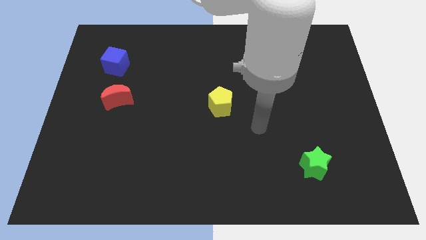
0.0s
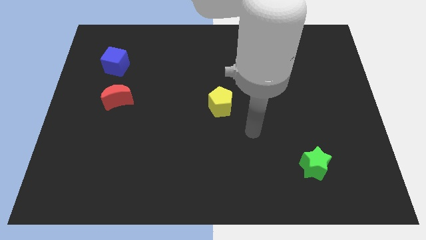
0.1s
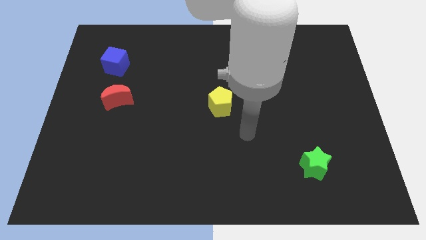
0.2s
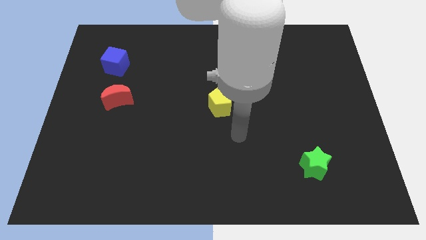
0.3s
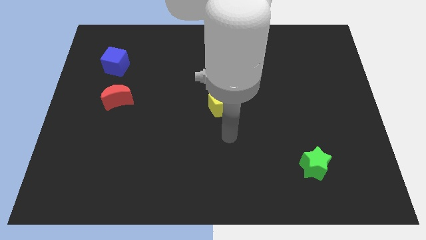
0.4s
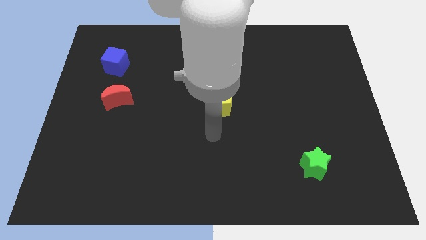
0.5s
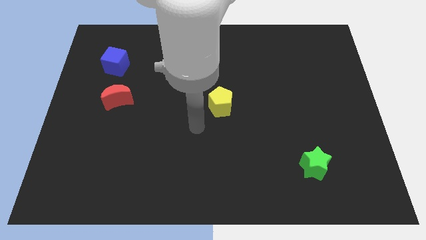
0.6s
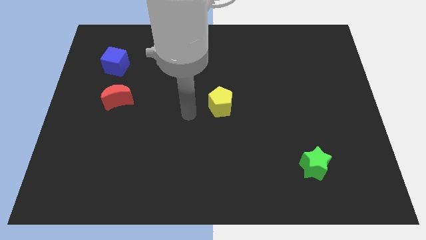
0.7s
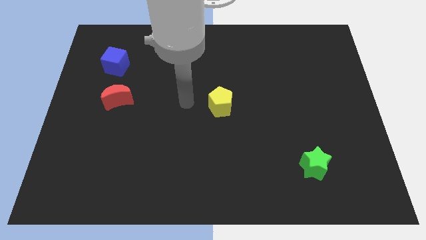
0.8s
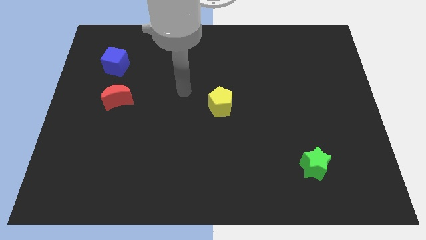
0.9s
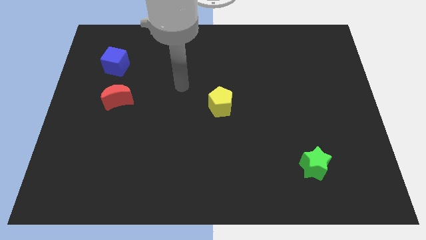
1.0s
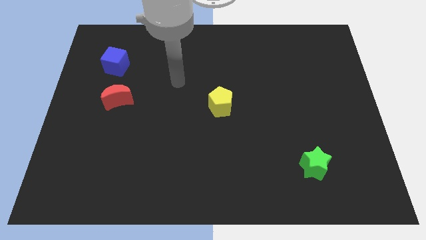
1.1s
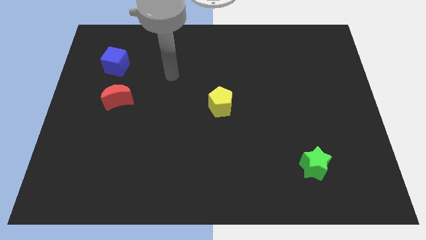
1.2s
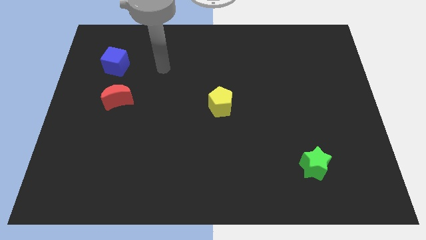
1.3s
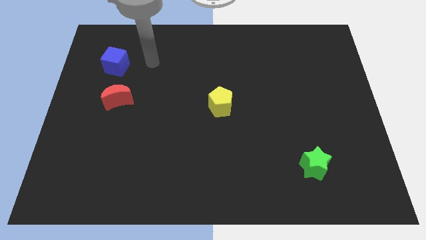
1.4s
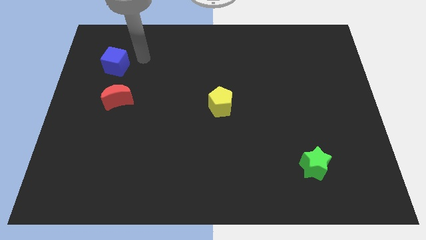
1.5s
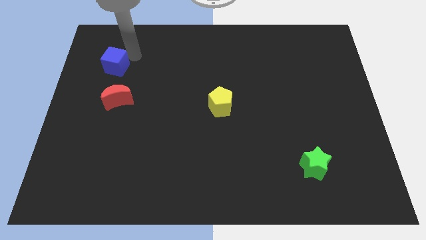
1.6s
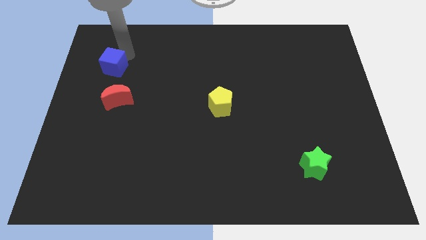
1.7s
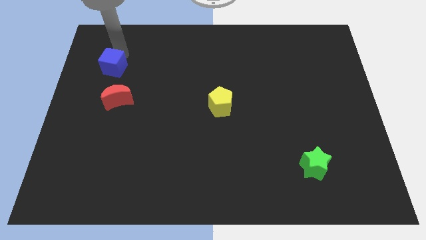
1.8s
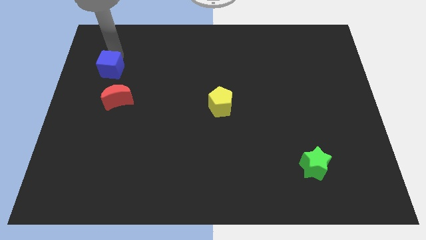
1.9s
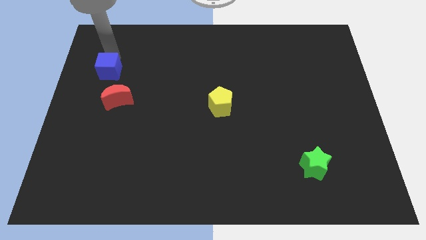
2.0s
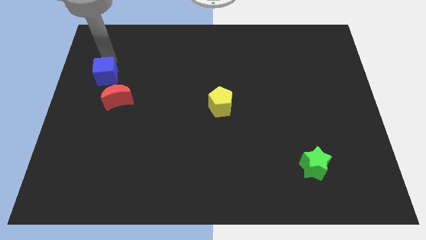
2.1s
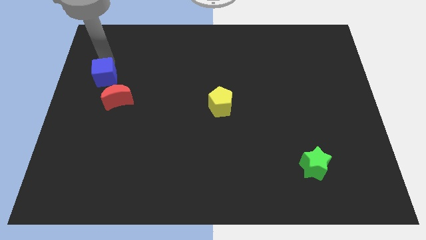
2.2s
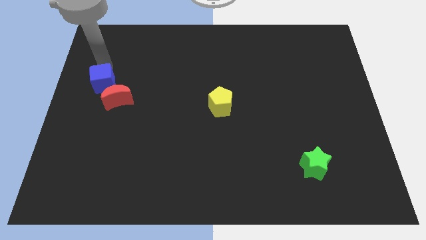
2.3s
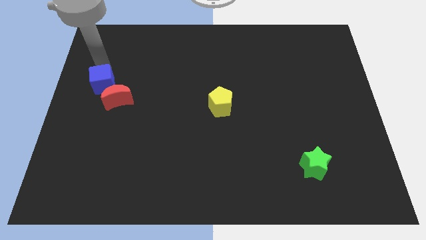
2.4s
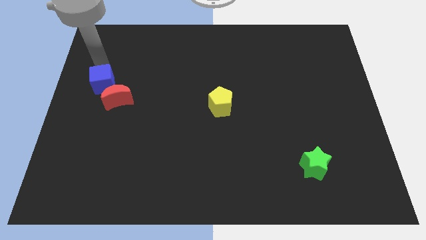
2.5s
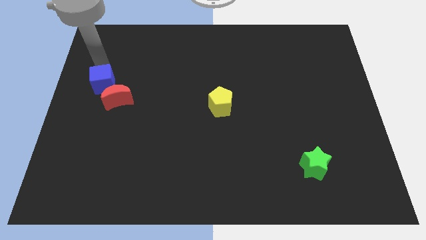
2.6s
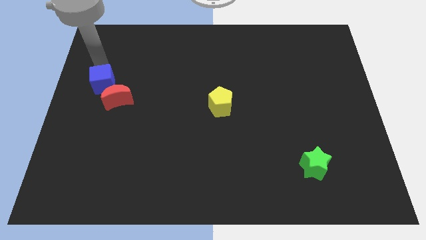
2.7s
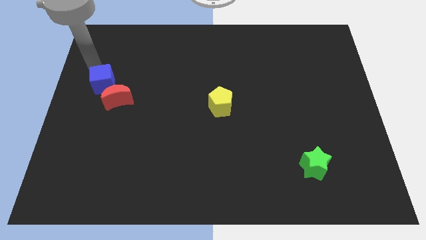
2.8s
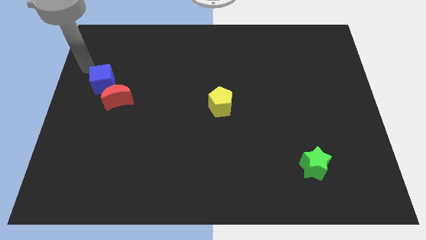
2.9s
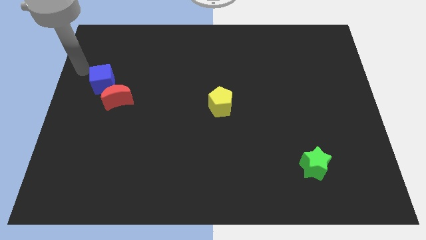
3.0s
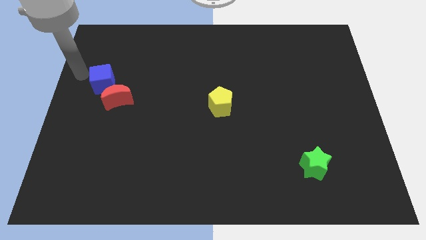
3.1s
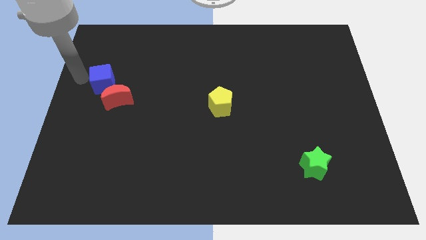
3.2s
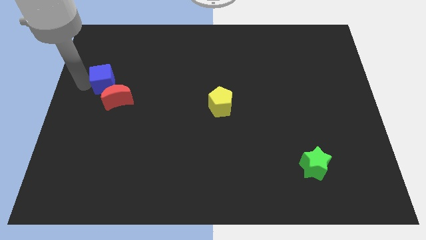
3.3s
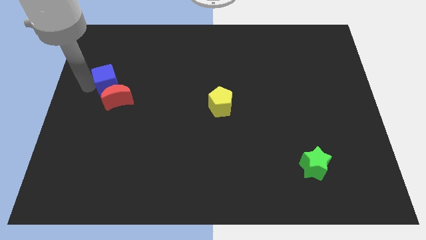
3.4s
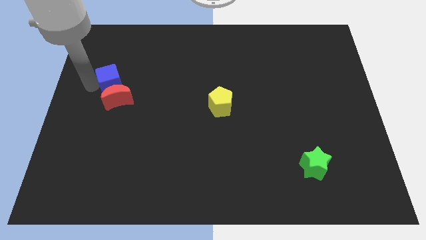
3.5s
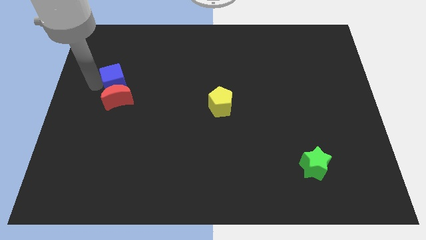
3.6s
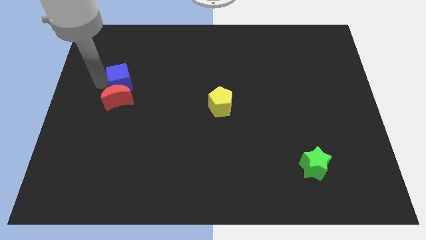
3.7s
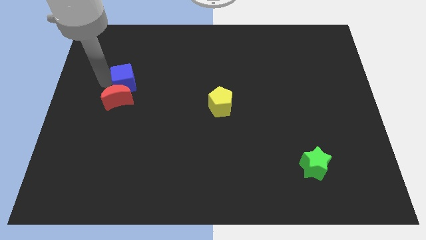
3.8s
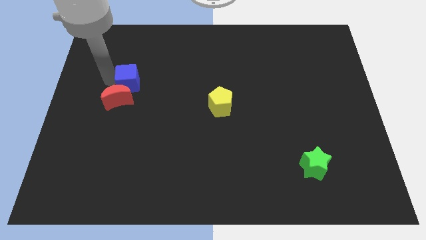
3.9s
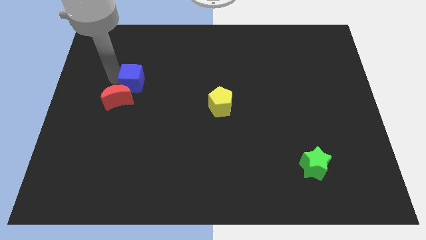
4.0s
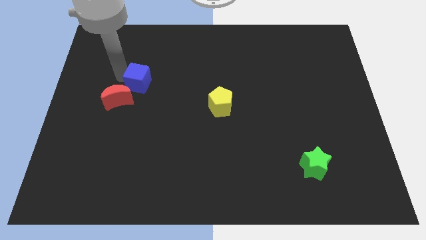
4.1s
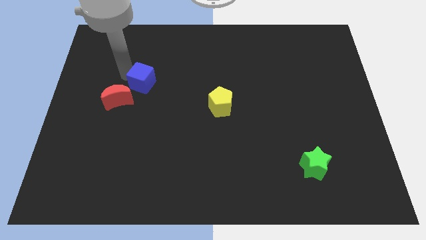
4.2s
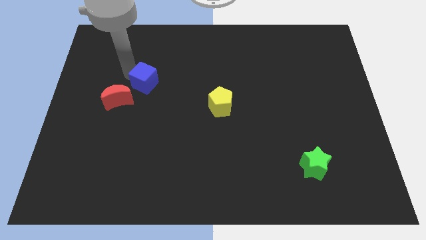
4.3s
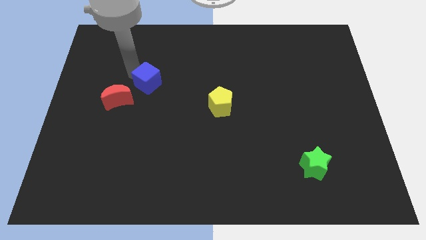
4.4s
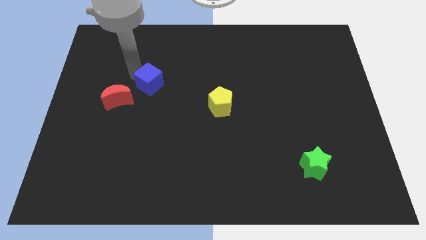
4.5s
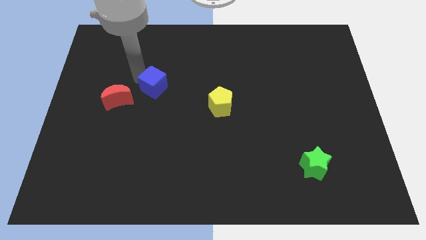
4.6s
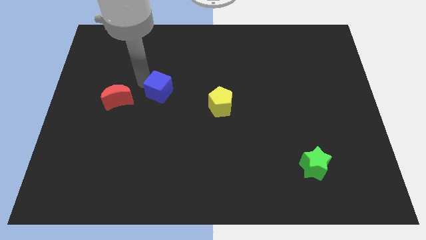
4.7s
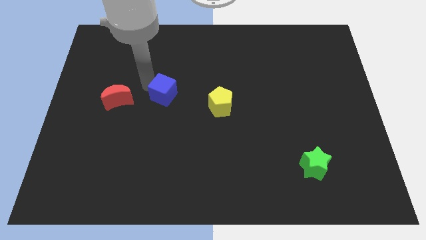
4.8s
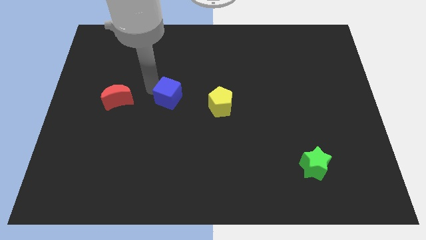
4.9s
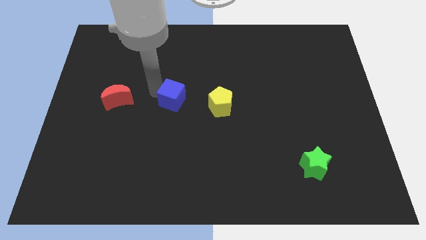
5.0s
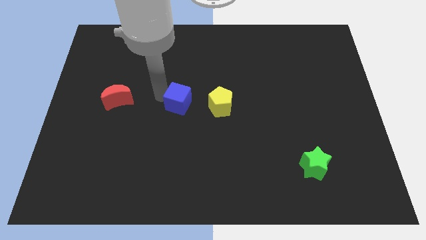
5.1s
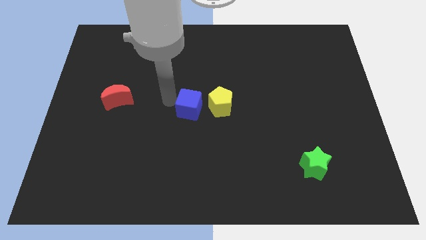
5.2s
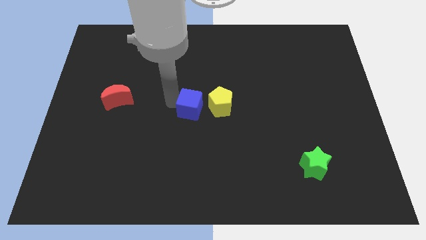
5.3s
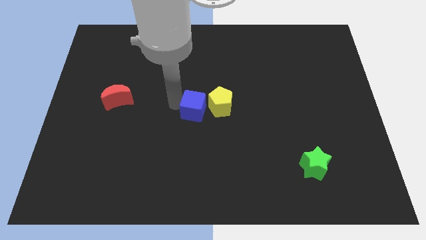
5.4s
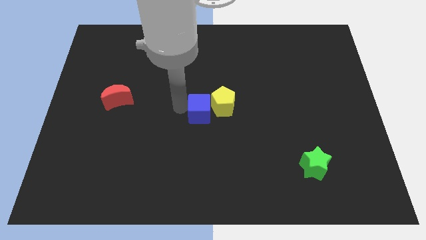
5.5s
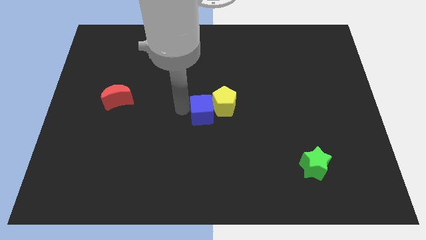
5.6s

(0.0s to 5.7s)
put the blue block next to the pentagon

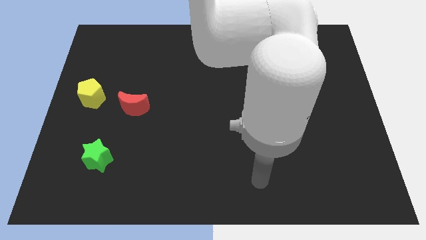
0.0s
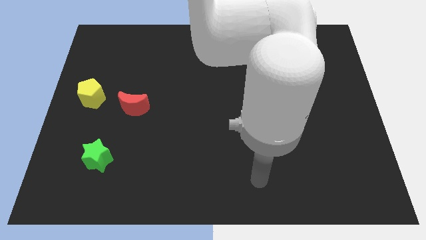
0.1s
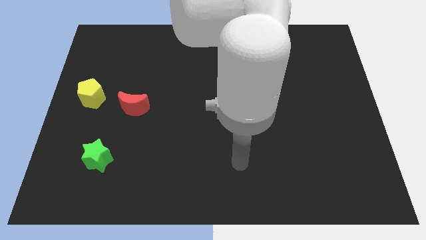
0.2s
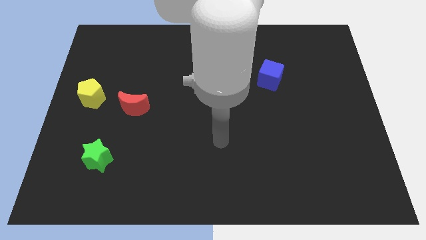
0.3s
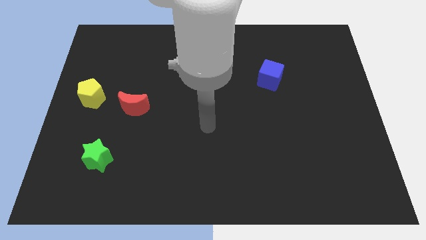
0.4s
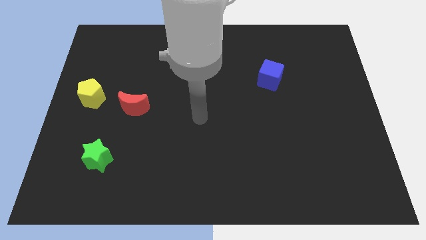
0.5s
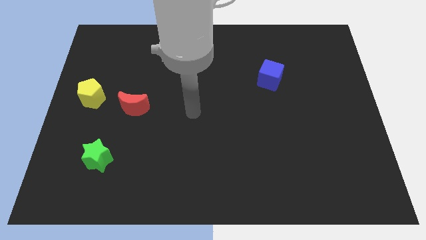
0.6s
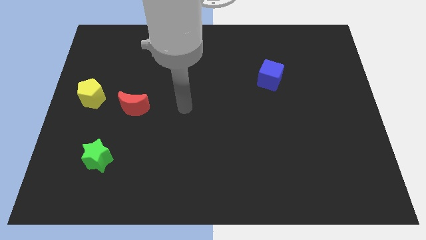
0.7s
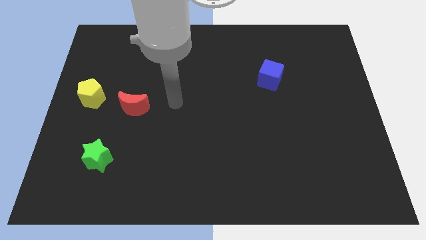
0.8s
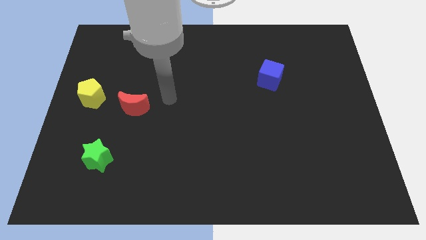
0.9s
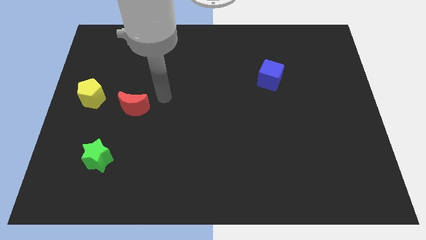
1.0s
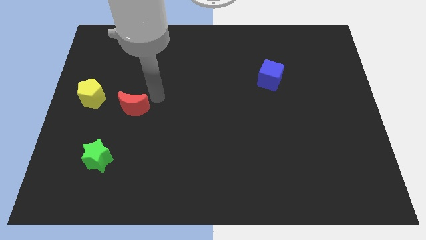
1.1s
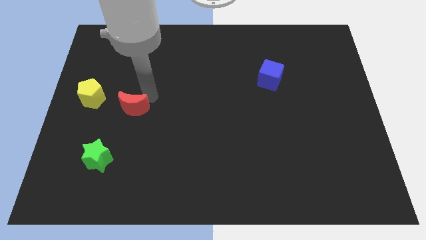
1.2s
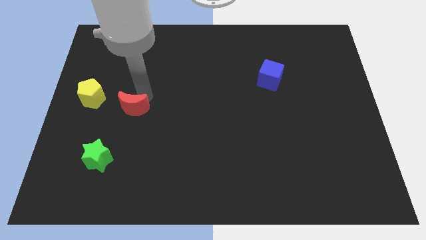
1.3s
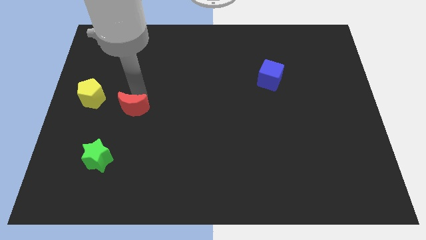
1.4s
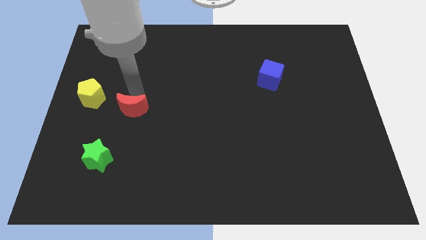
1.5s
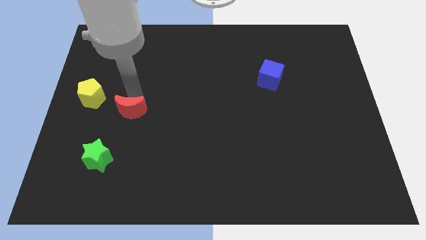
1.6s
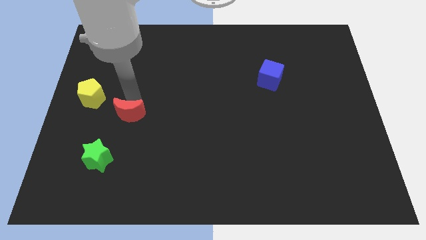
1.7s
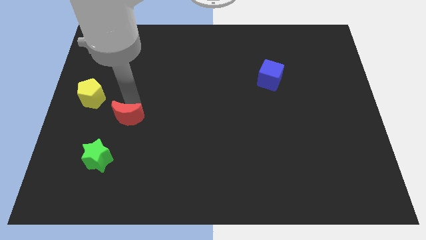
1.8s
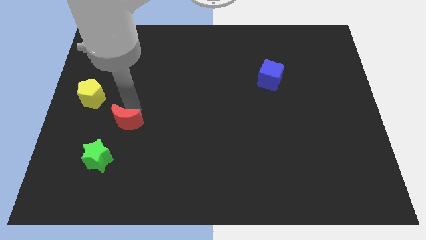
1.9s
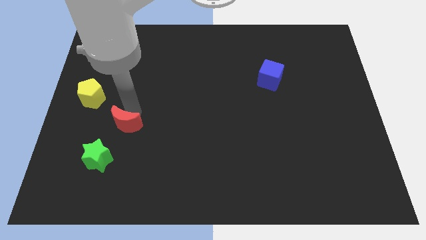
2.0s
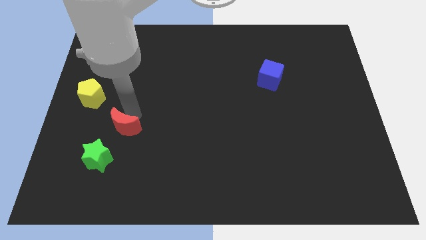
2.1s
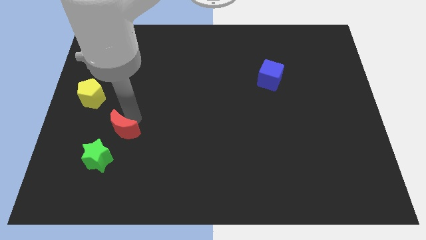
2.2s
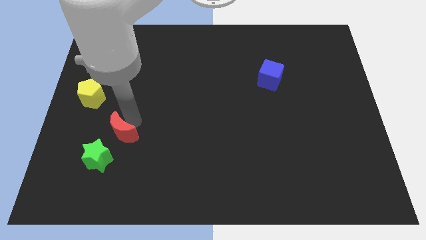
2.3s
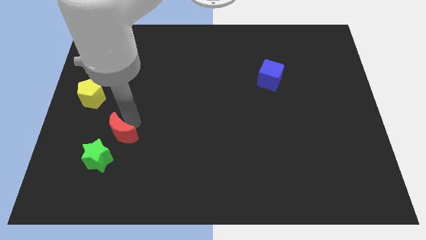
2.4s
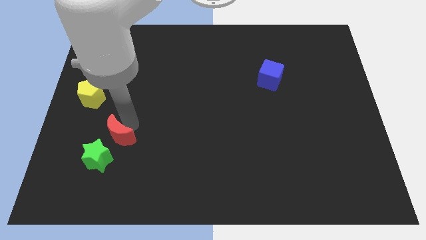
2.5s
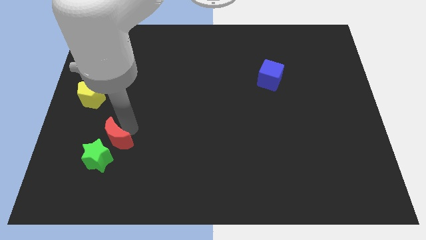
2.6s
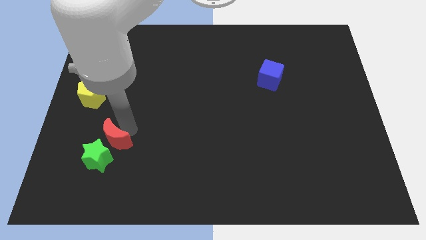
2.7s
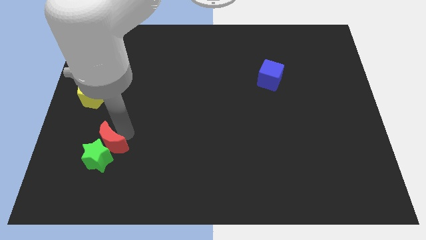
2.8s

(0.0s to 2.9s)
slide the moon towards the green block
